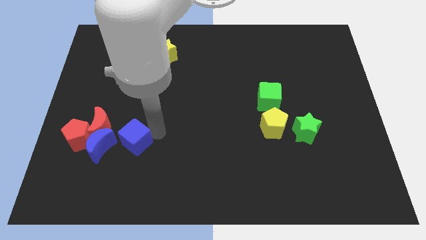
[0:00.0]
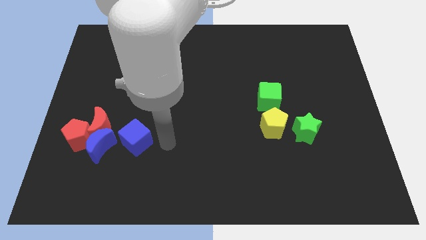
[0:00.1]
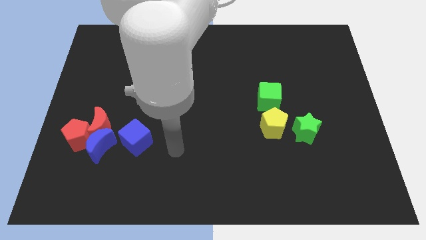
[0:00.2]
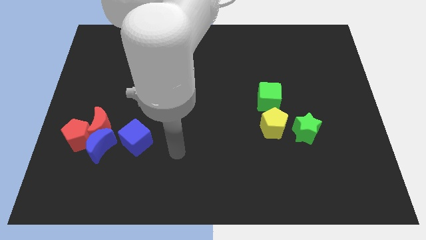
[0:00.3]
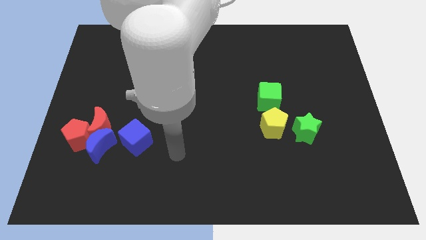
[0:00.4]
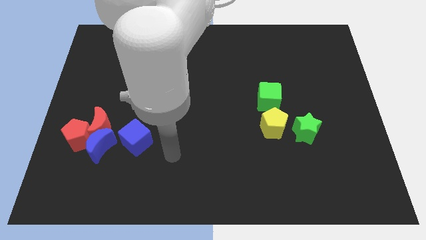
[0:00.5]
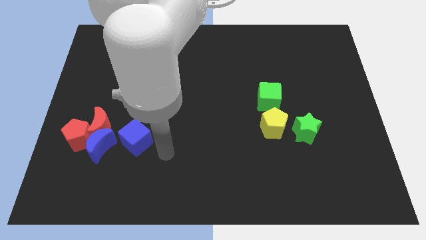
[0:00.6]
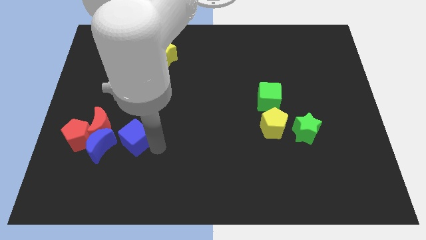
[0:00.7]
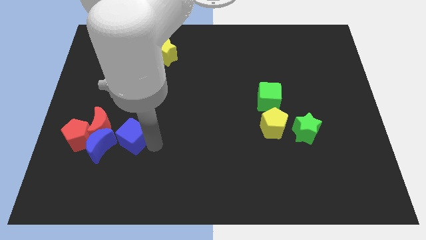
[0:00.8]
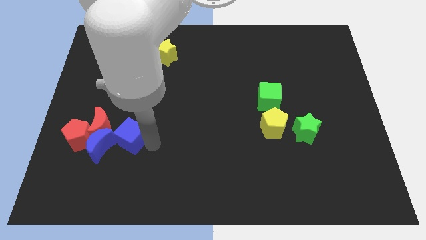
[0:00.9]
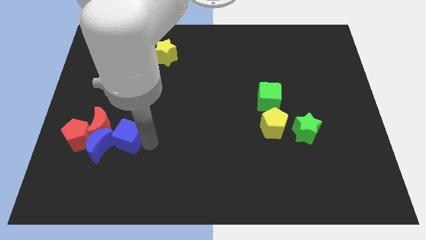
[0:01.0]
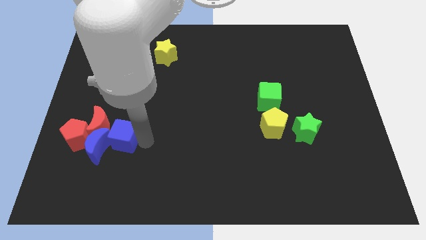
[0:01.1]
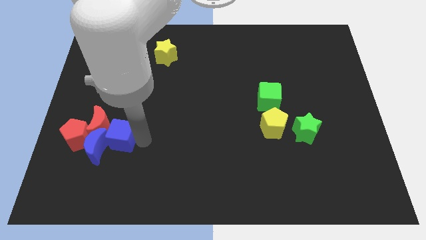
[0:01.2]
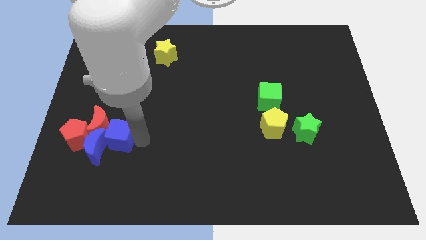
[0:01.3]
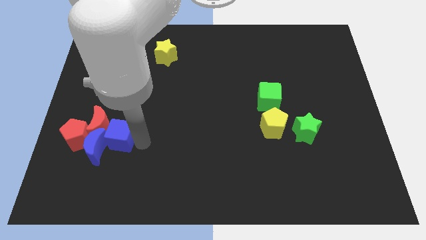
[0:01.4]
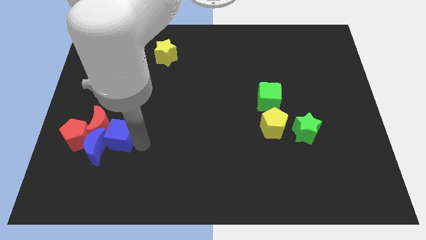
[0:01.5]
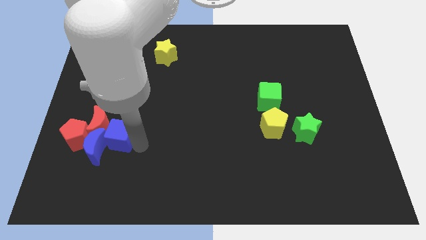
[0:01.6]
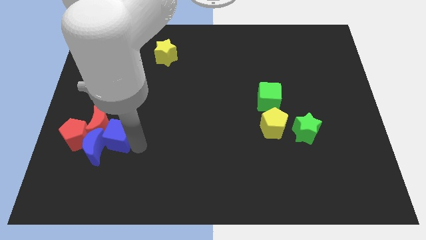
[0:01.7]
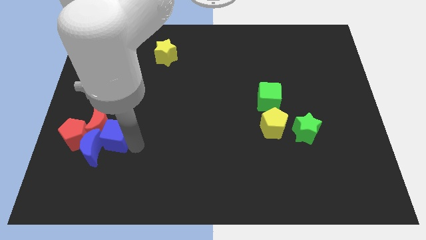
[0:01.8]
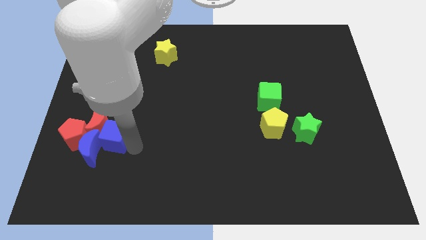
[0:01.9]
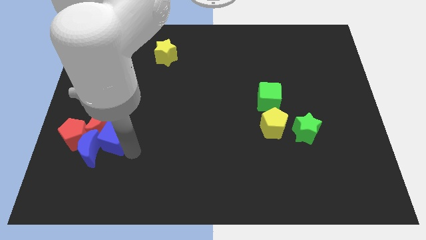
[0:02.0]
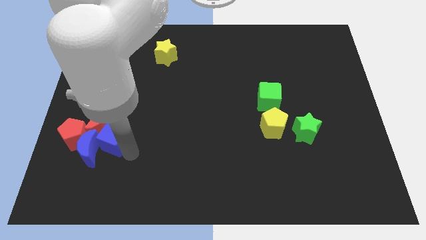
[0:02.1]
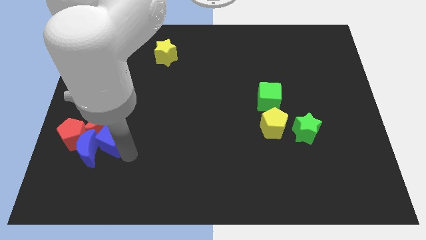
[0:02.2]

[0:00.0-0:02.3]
move the blue cube into the red crescent

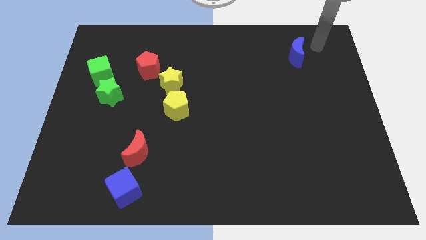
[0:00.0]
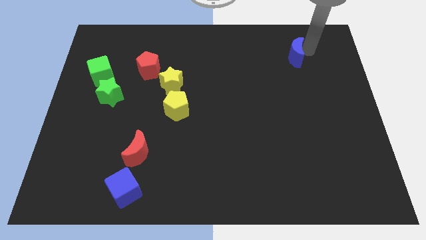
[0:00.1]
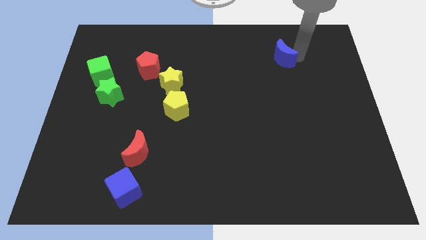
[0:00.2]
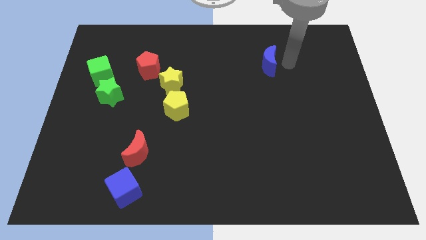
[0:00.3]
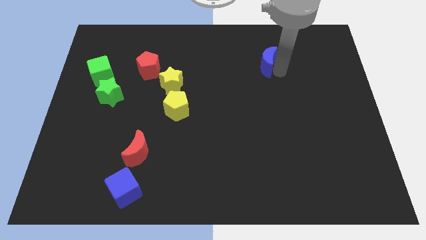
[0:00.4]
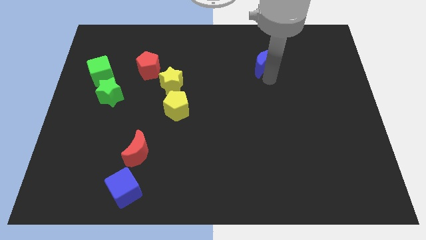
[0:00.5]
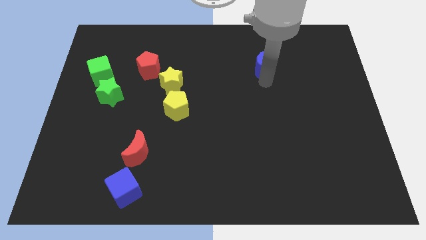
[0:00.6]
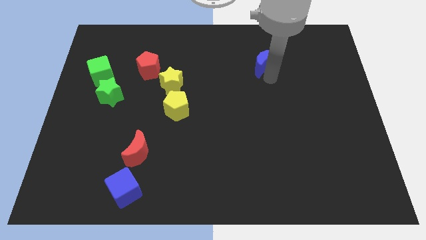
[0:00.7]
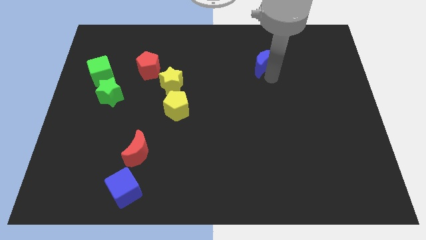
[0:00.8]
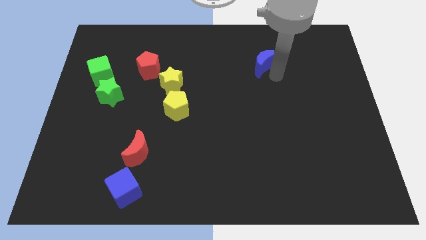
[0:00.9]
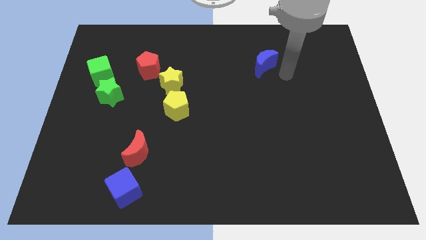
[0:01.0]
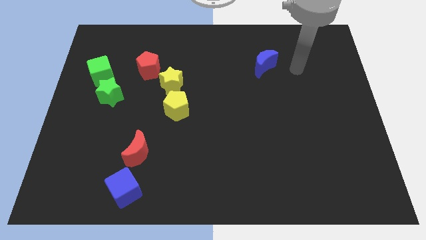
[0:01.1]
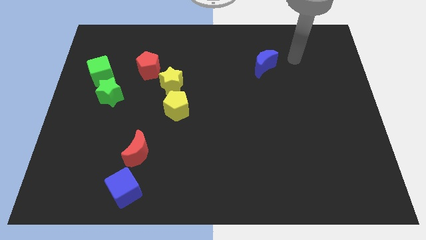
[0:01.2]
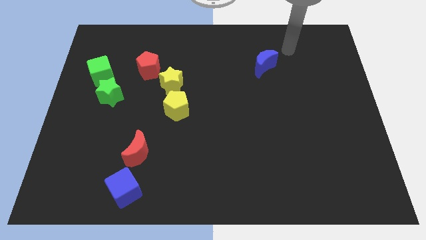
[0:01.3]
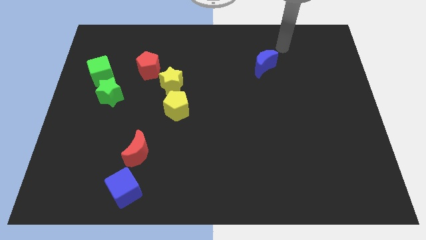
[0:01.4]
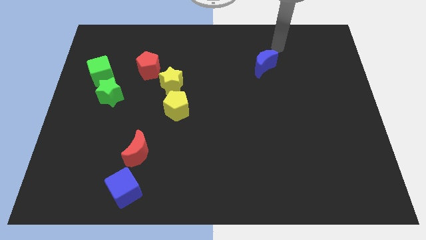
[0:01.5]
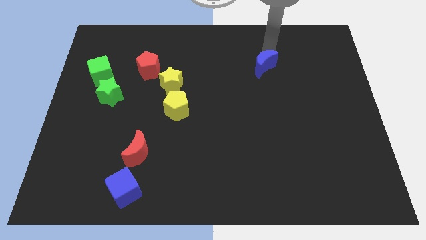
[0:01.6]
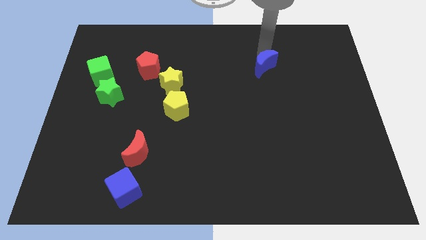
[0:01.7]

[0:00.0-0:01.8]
slide the blue crescent slightly to the bottom left side of the board

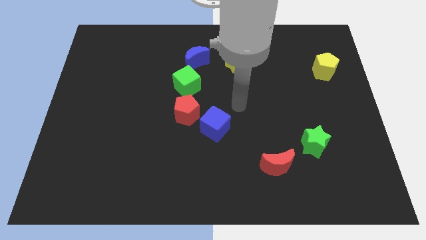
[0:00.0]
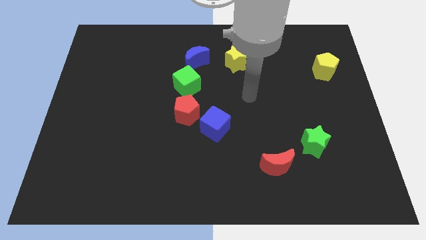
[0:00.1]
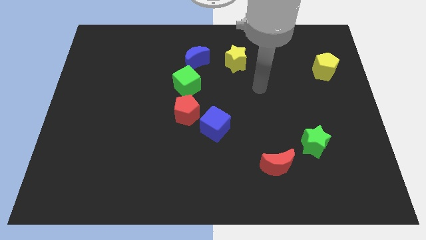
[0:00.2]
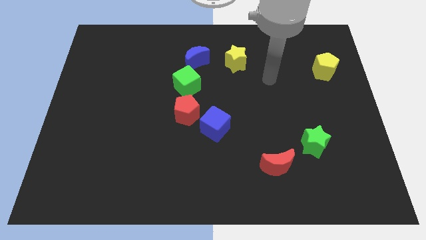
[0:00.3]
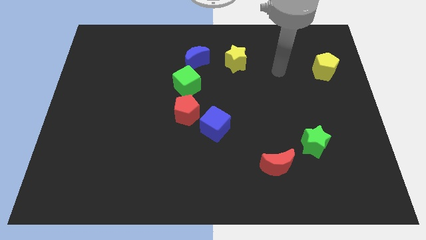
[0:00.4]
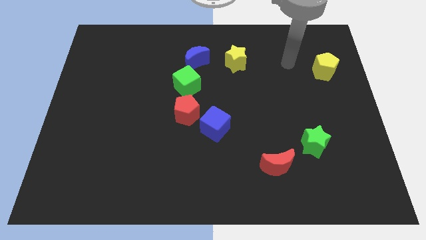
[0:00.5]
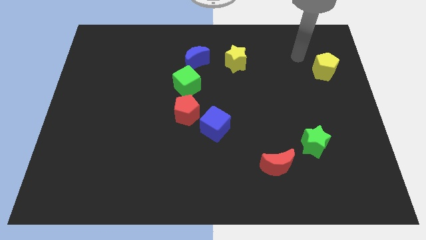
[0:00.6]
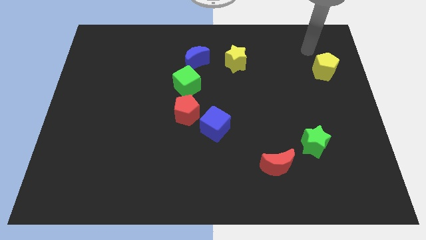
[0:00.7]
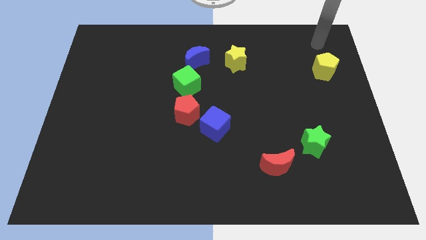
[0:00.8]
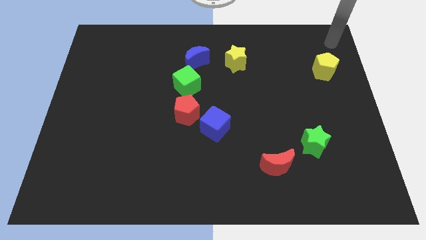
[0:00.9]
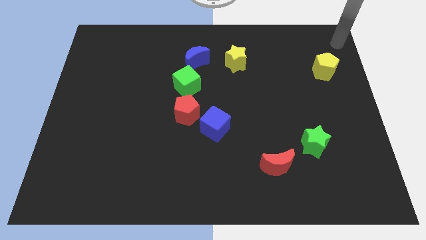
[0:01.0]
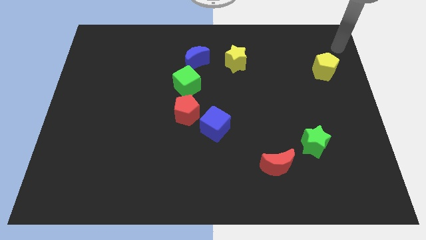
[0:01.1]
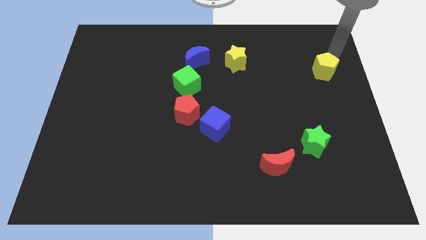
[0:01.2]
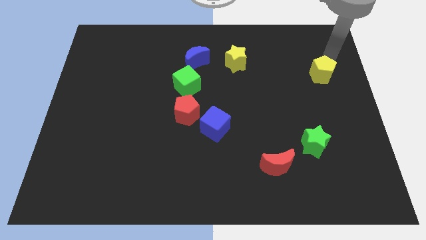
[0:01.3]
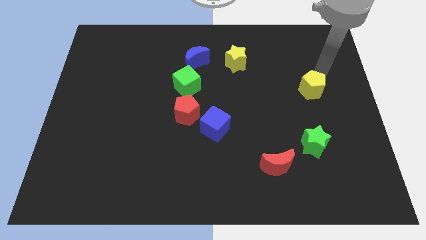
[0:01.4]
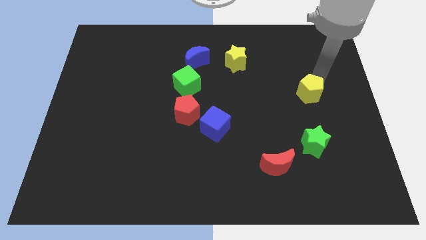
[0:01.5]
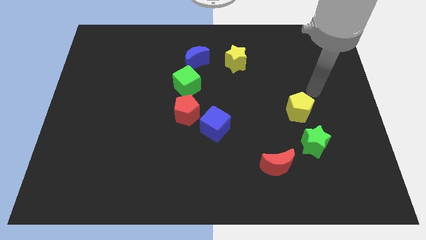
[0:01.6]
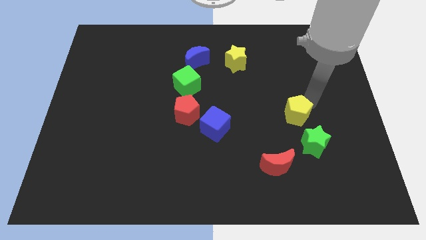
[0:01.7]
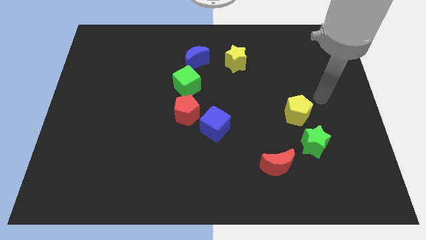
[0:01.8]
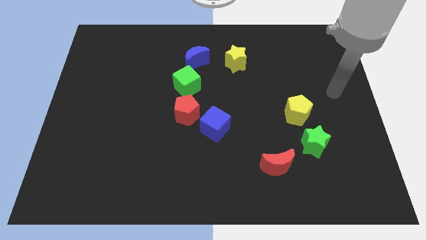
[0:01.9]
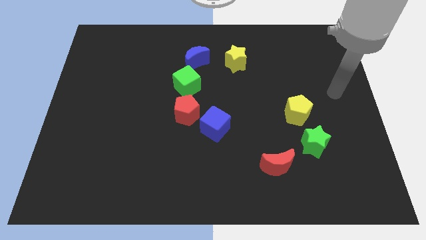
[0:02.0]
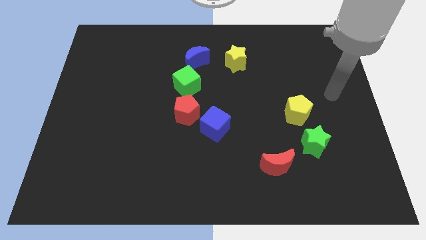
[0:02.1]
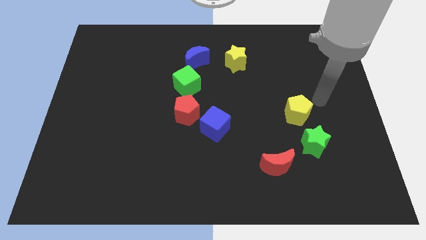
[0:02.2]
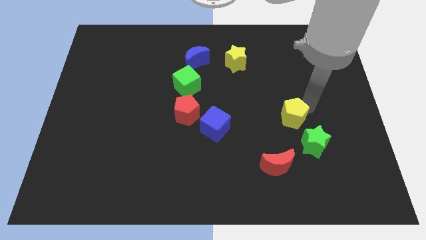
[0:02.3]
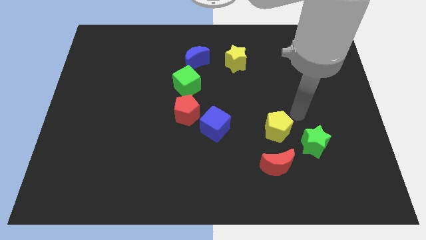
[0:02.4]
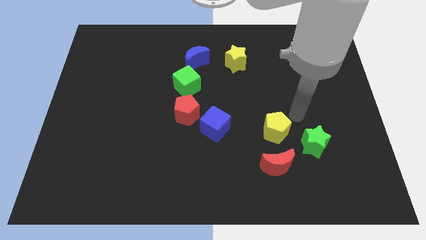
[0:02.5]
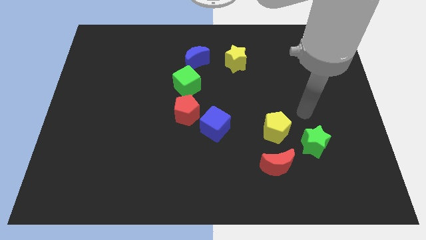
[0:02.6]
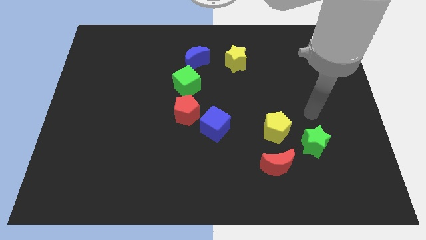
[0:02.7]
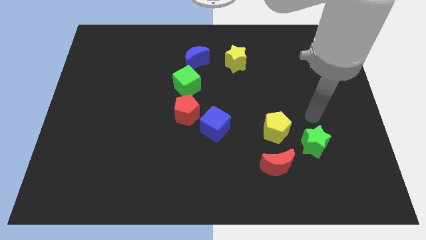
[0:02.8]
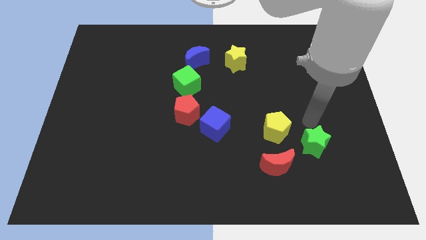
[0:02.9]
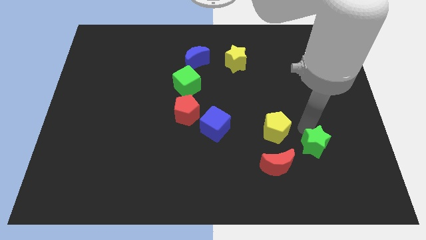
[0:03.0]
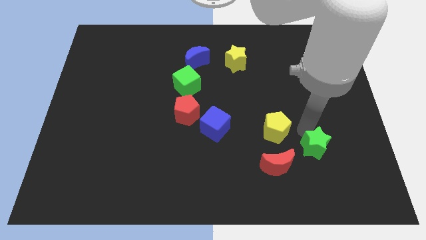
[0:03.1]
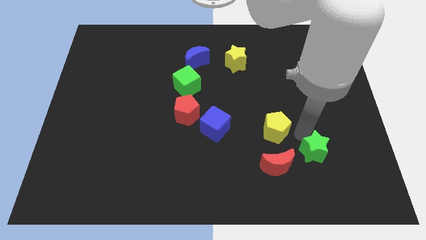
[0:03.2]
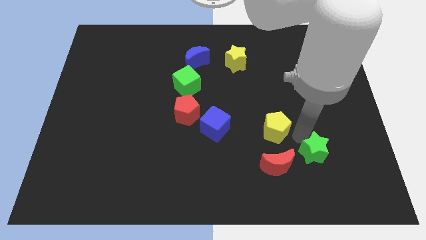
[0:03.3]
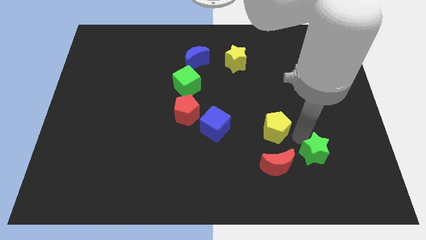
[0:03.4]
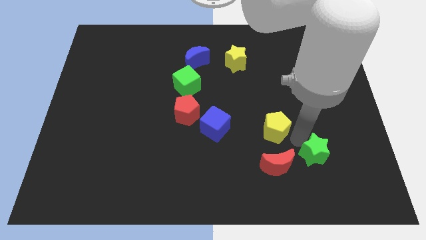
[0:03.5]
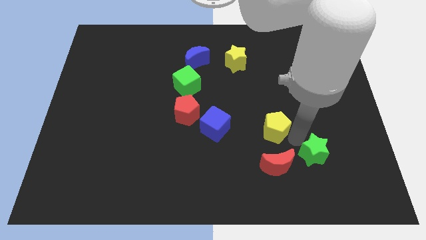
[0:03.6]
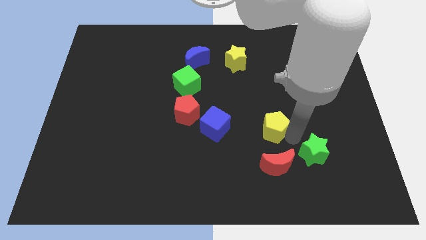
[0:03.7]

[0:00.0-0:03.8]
place the yellow pentagon above the red crescent

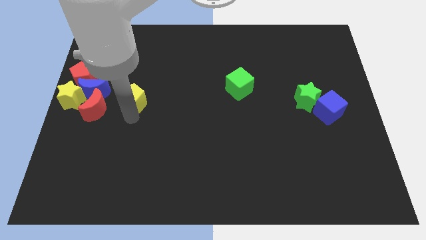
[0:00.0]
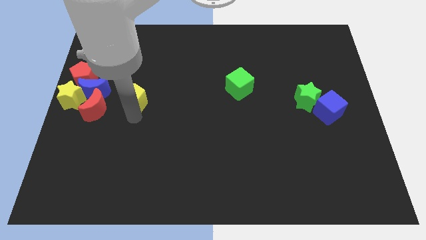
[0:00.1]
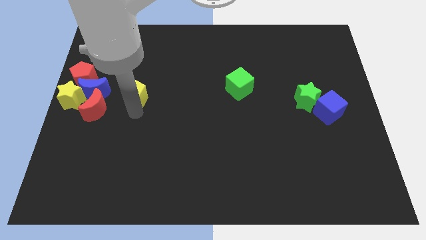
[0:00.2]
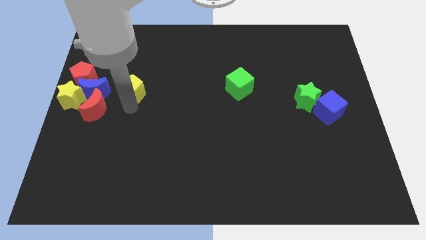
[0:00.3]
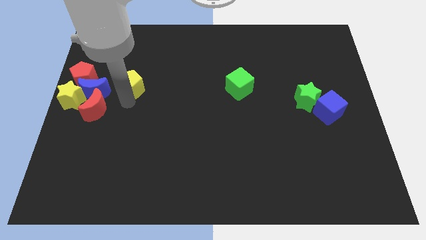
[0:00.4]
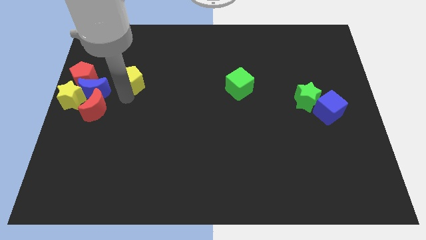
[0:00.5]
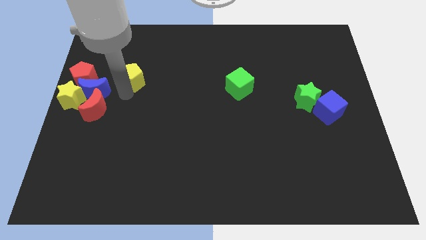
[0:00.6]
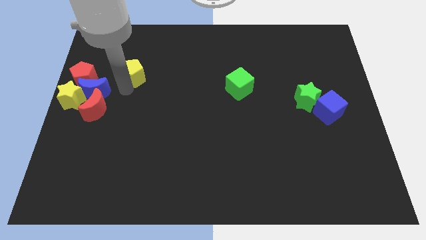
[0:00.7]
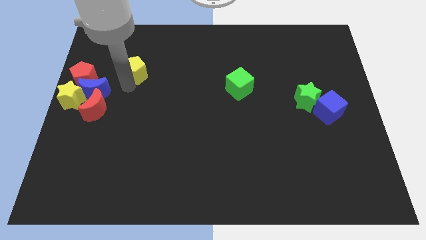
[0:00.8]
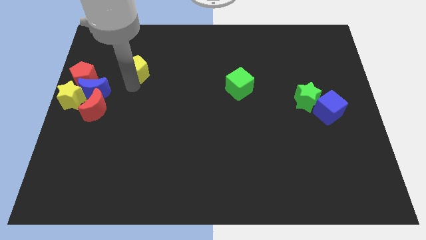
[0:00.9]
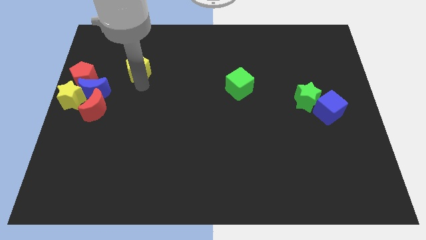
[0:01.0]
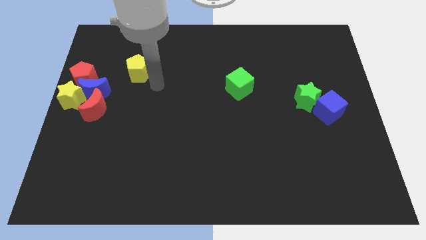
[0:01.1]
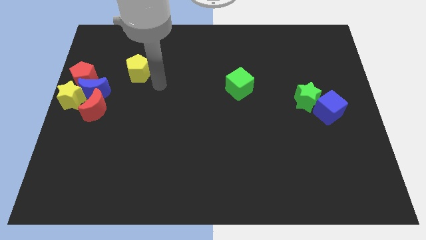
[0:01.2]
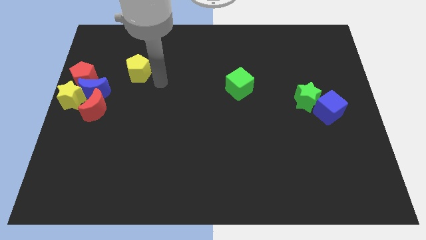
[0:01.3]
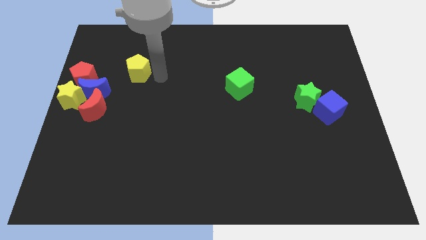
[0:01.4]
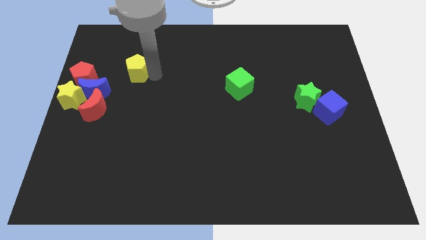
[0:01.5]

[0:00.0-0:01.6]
push the yellow pentagon diagonally top right to the blue moon
